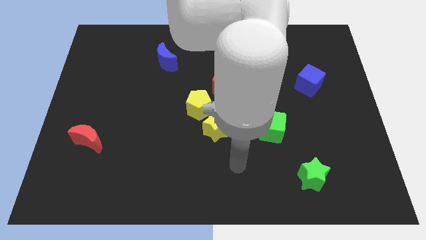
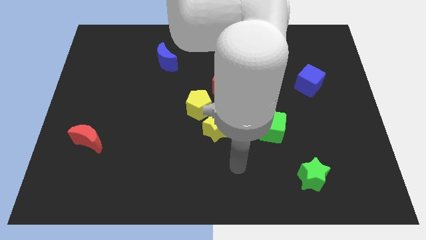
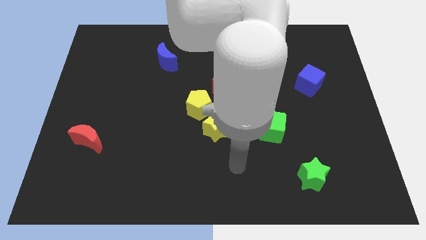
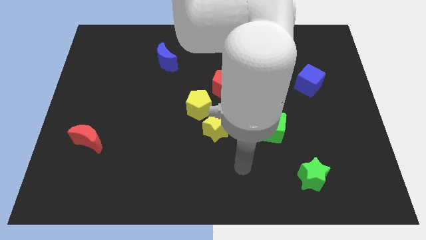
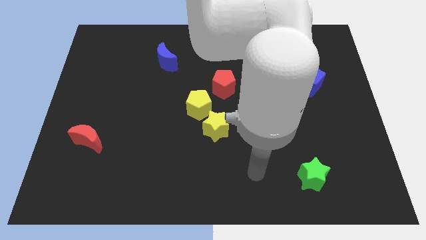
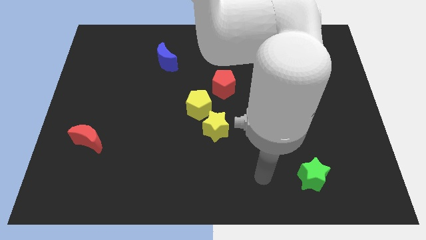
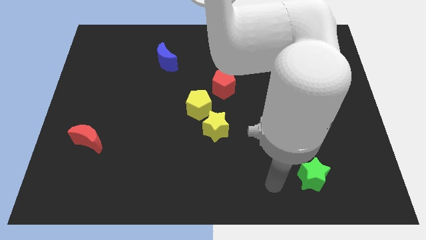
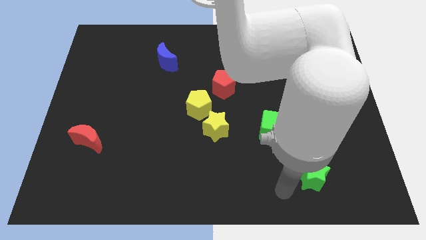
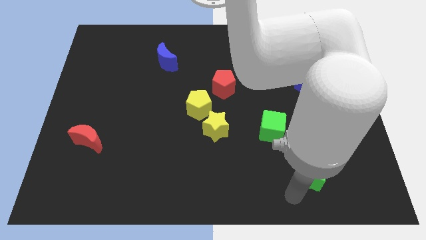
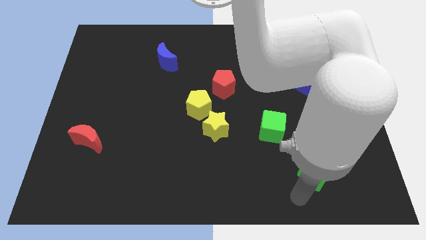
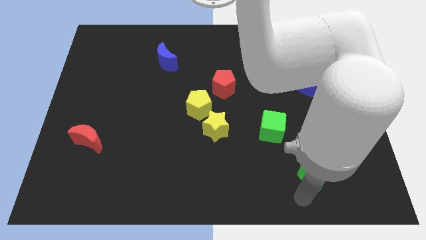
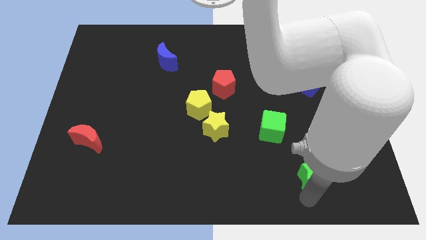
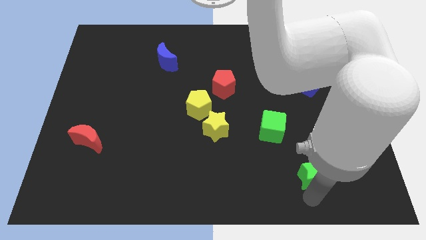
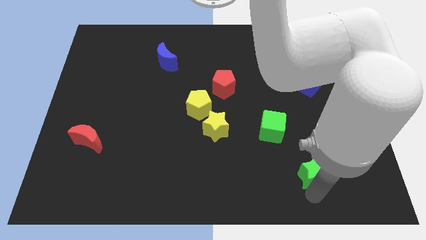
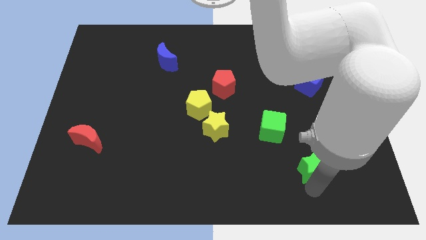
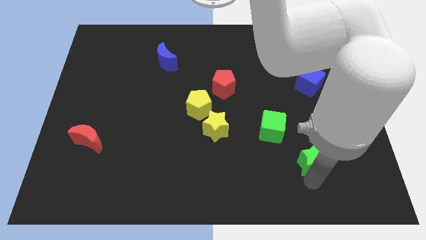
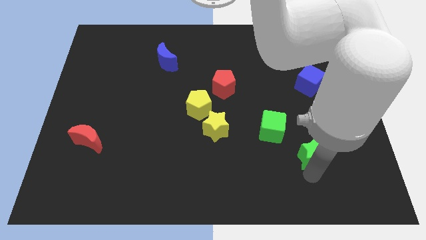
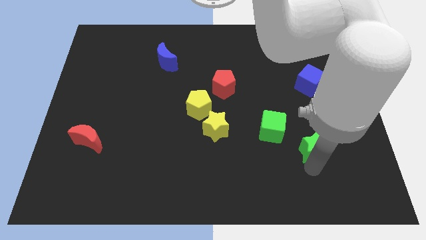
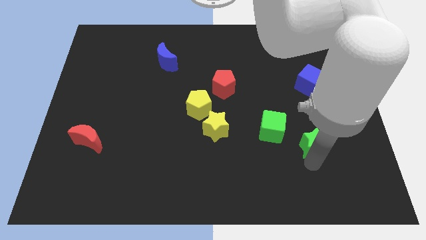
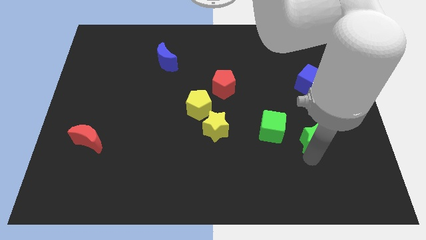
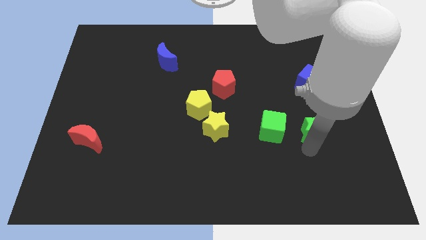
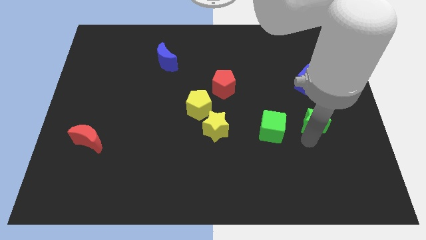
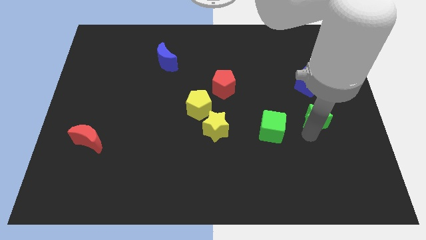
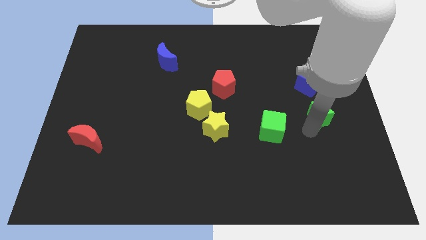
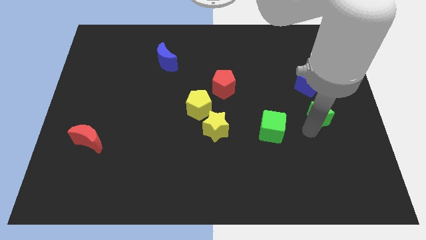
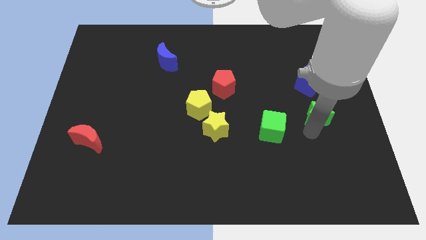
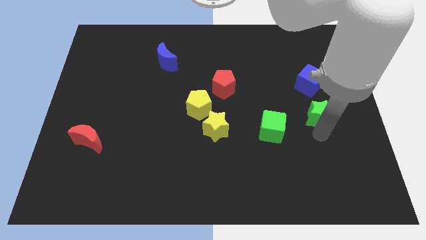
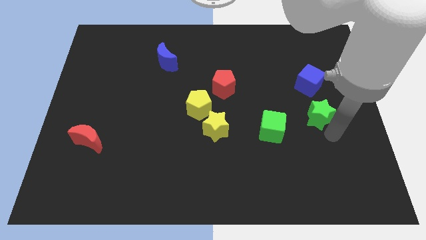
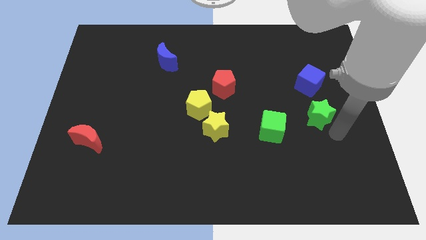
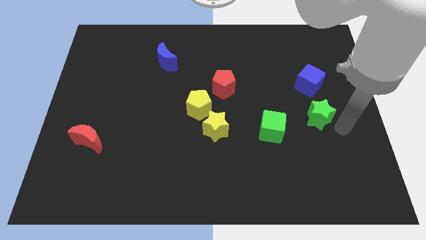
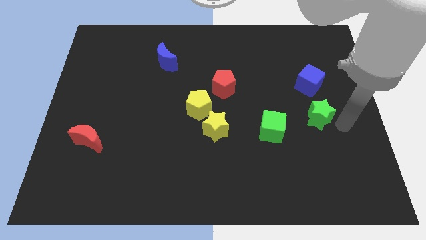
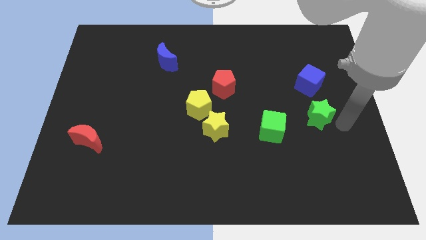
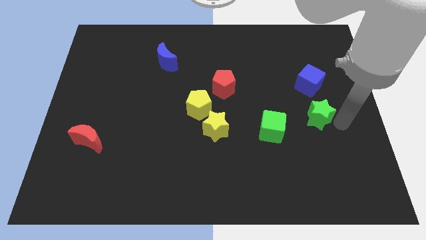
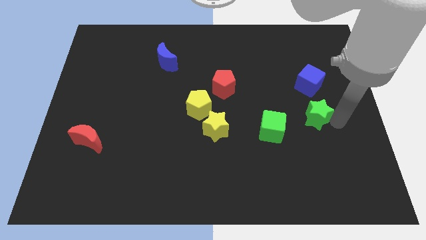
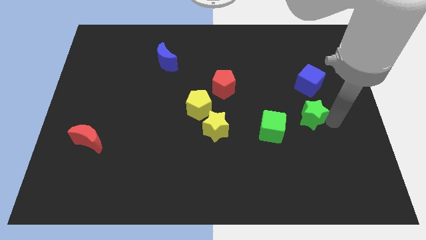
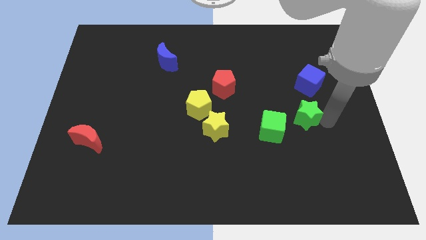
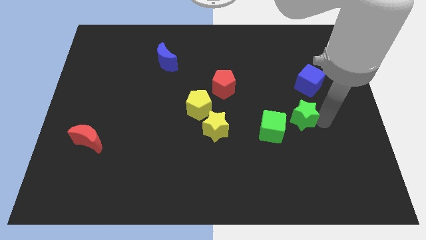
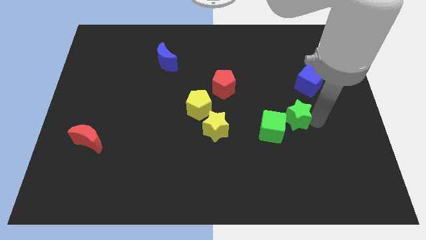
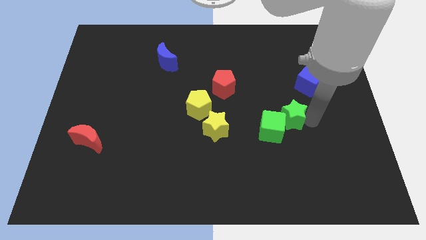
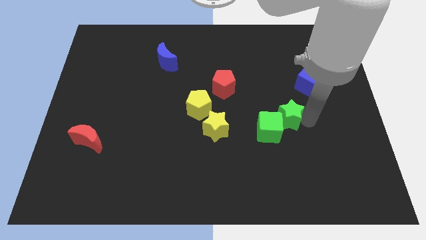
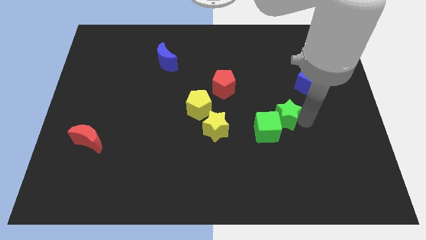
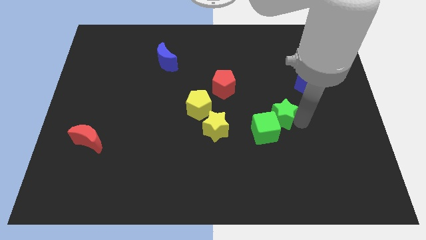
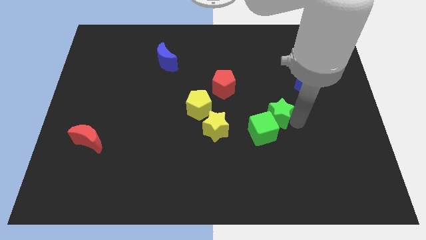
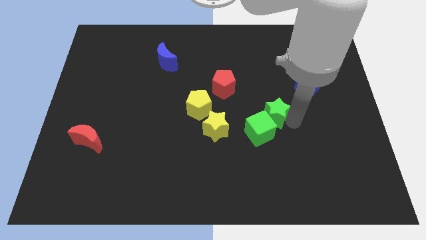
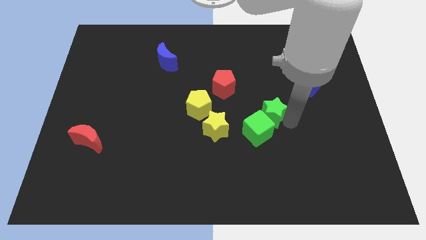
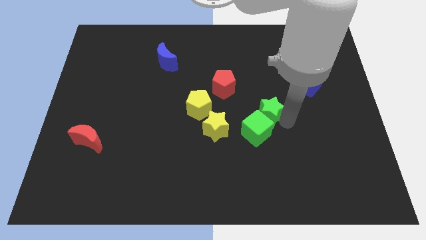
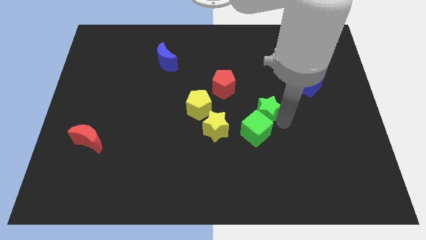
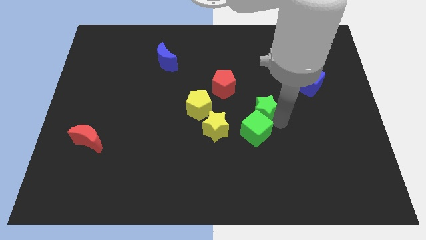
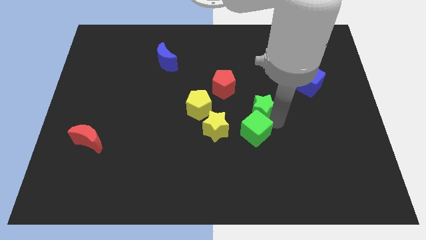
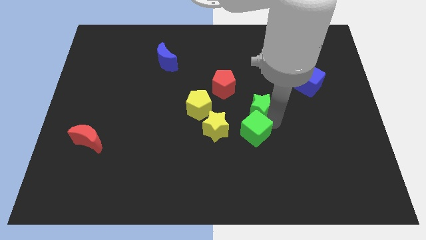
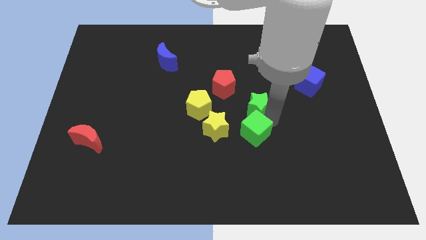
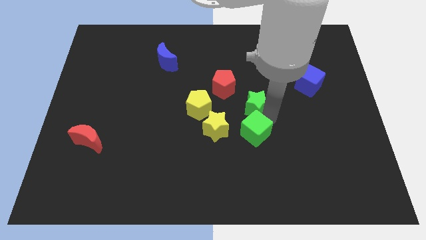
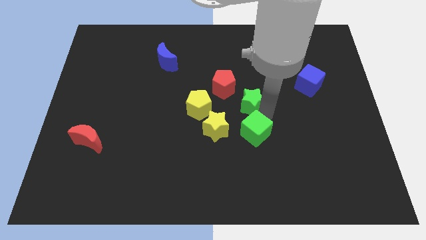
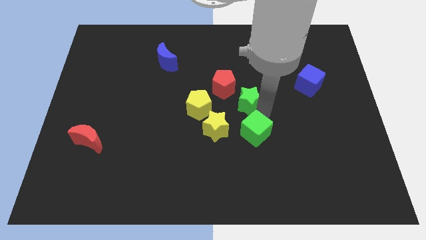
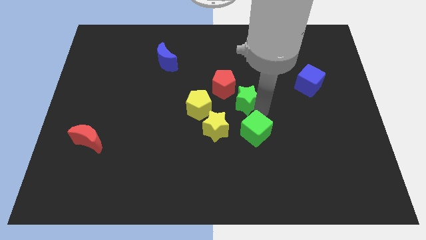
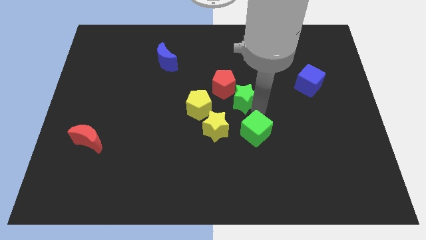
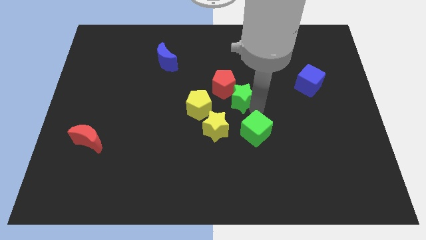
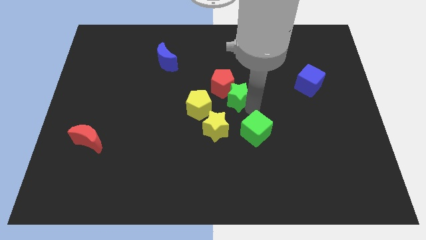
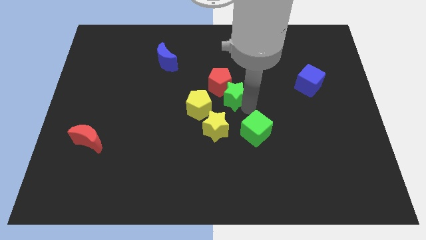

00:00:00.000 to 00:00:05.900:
put the green star next to the red pentagon

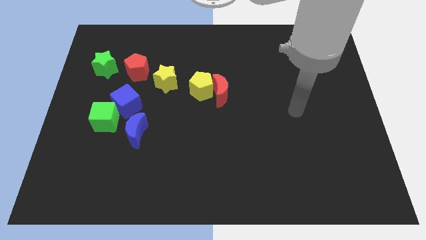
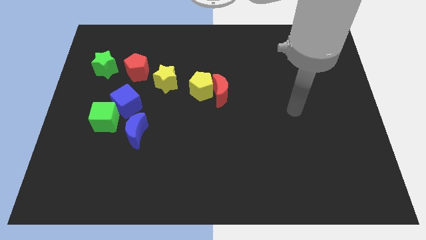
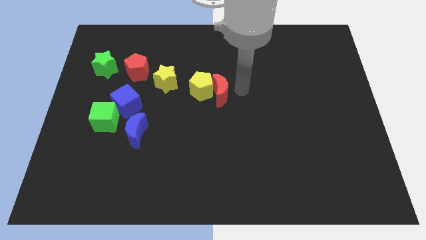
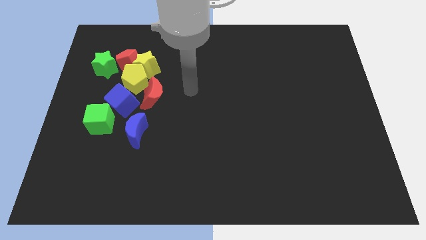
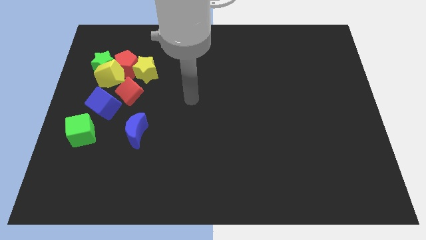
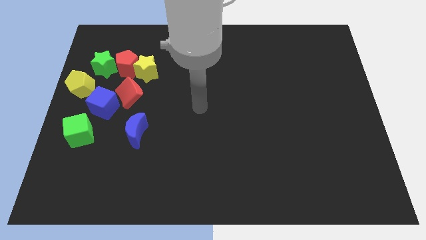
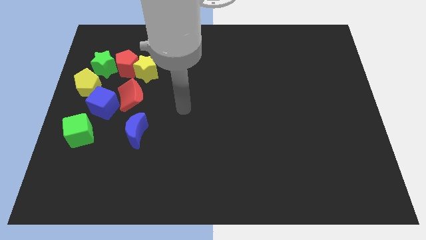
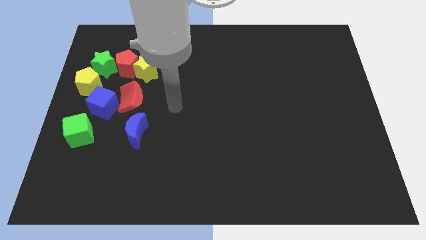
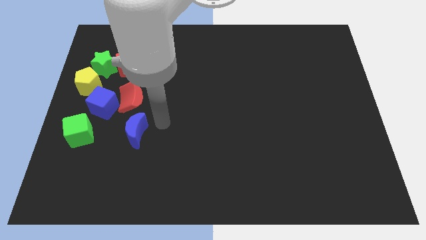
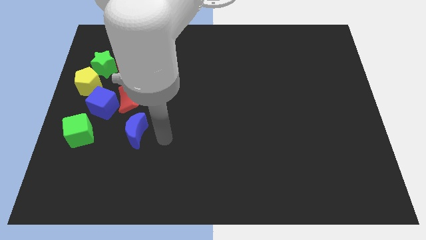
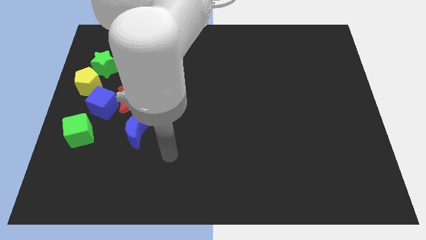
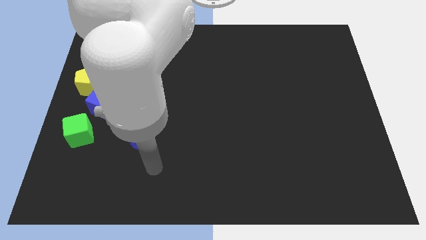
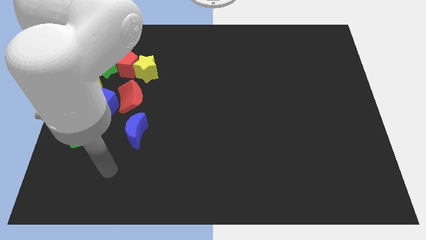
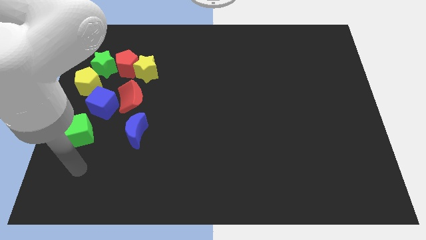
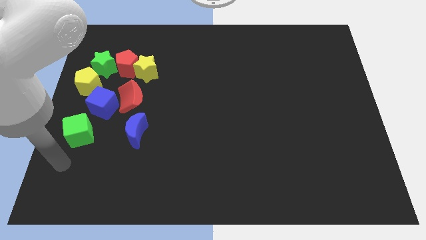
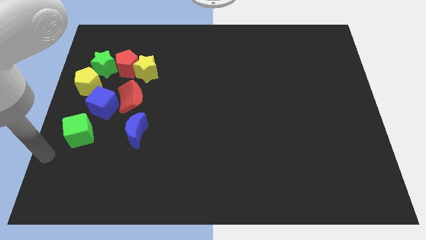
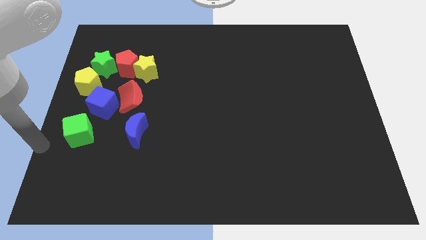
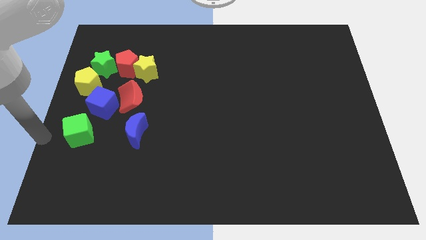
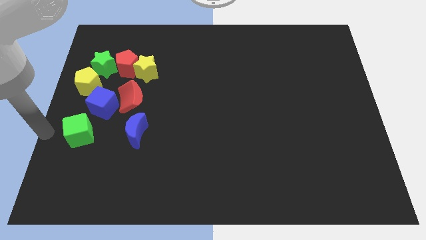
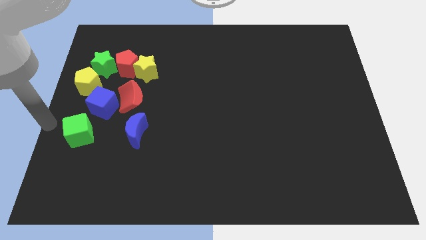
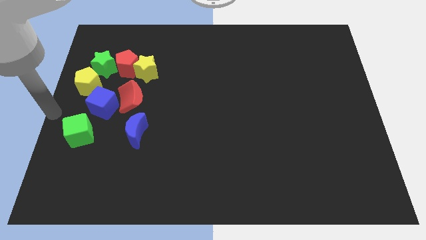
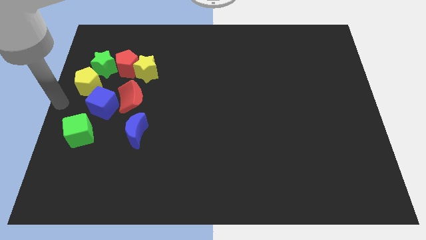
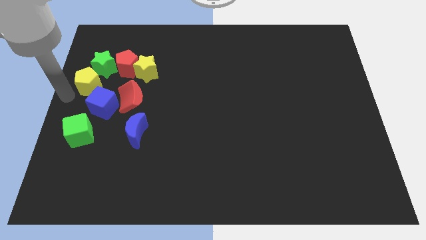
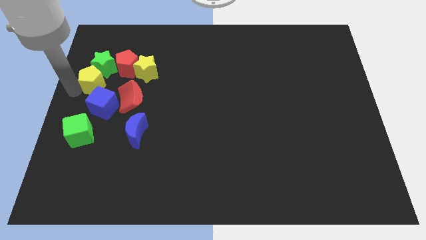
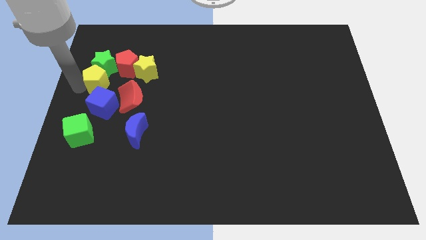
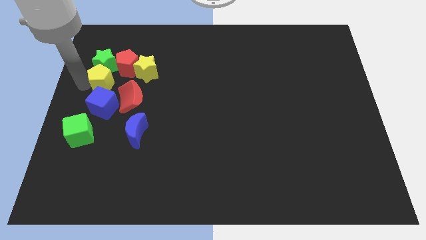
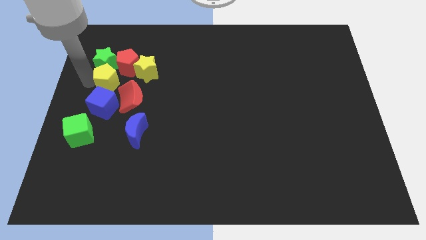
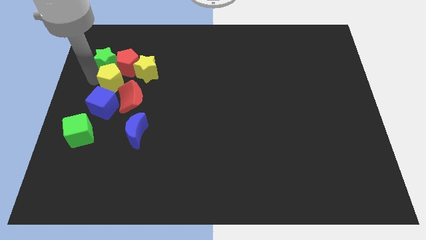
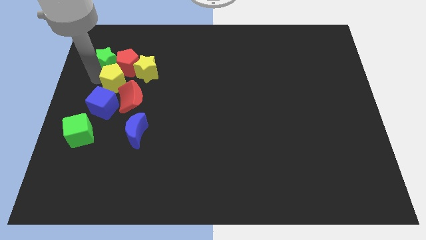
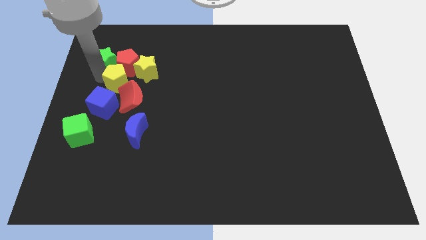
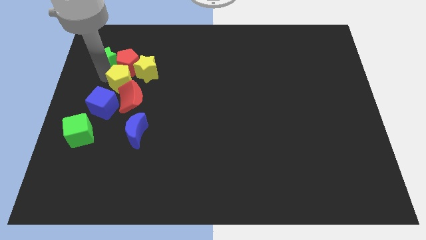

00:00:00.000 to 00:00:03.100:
push the yellow pentagon next to the red pentagon
